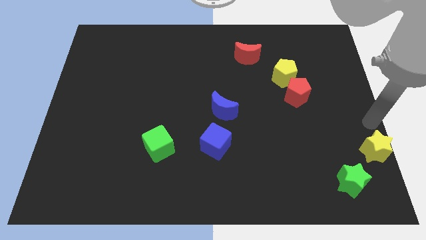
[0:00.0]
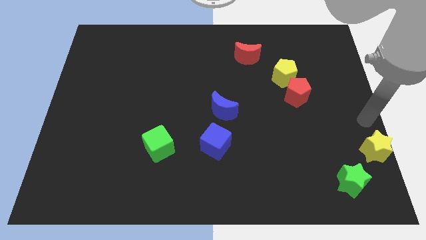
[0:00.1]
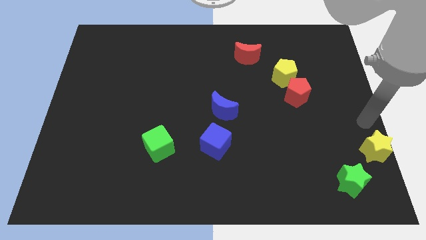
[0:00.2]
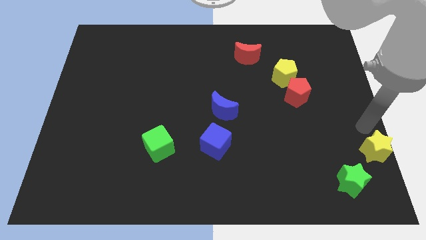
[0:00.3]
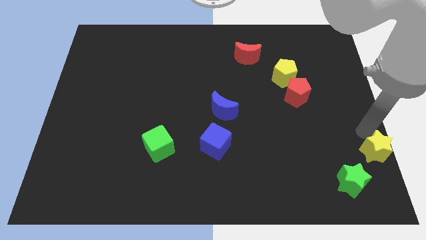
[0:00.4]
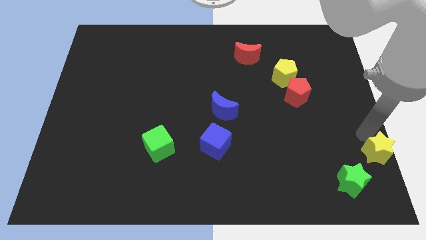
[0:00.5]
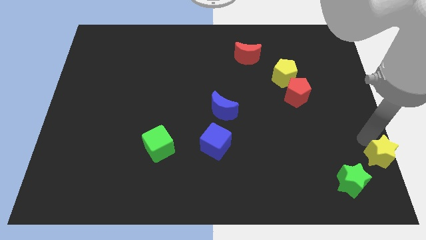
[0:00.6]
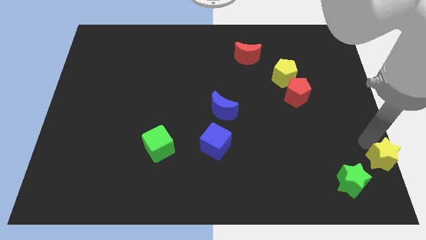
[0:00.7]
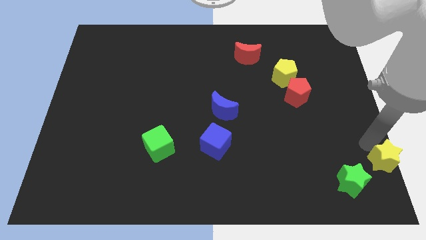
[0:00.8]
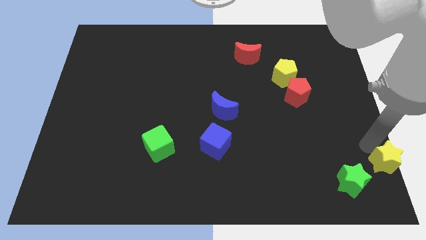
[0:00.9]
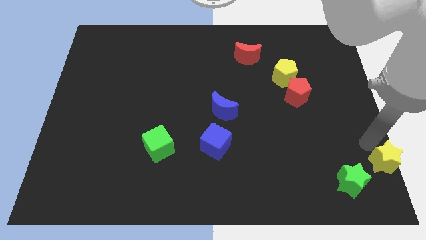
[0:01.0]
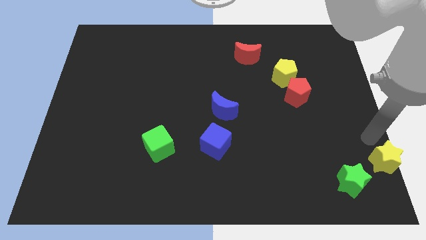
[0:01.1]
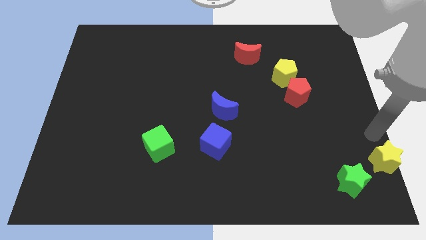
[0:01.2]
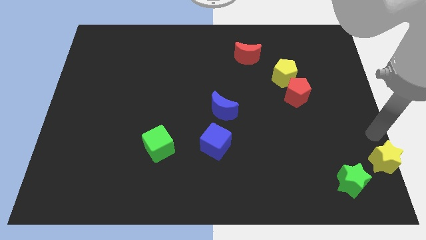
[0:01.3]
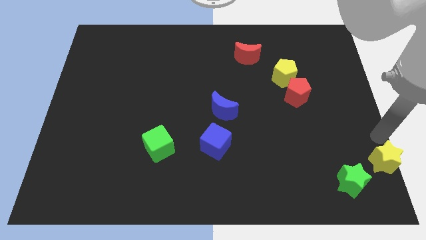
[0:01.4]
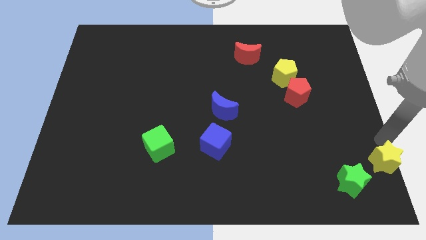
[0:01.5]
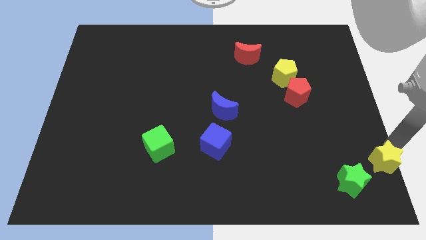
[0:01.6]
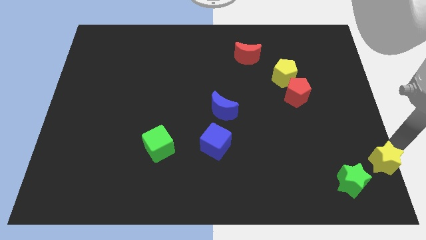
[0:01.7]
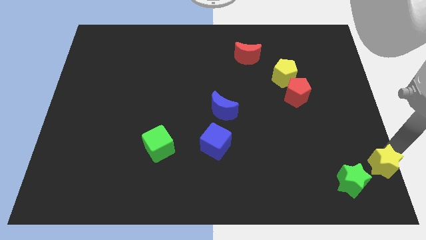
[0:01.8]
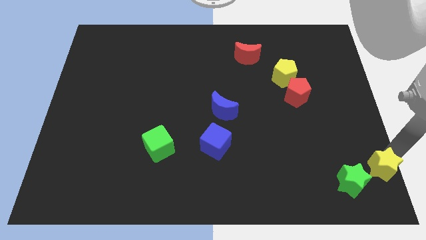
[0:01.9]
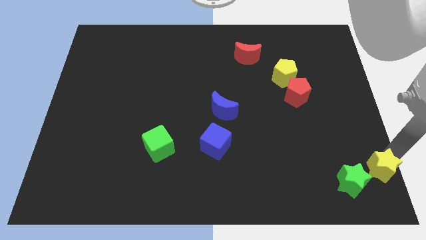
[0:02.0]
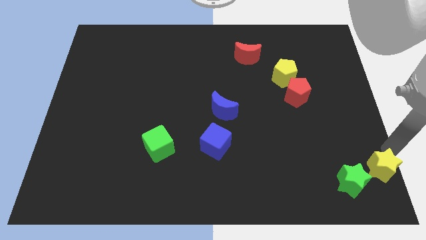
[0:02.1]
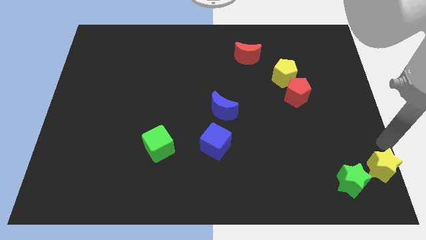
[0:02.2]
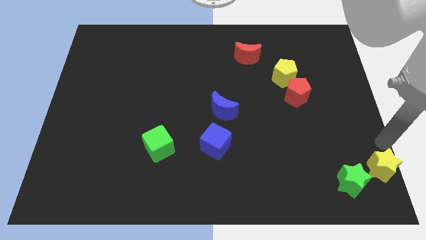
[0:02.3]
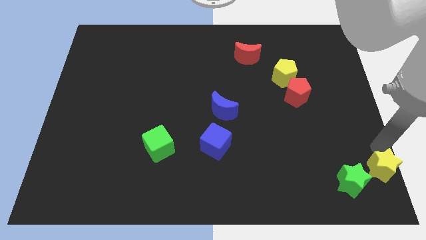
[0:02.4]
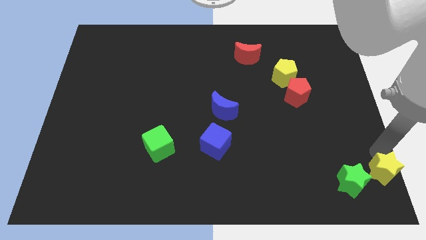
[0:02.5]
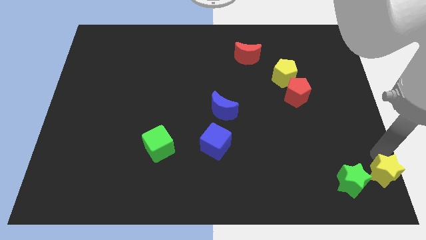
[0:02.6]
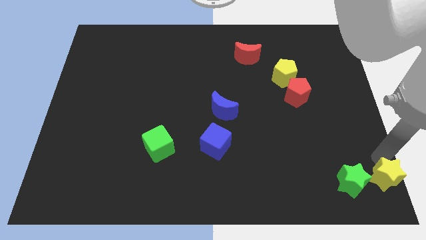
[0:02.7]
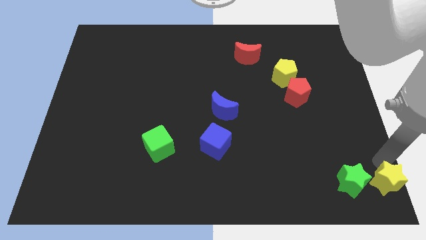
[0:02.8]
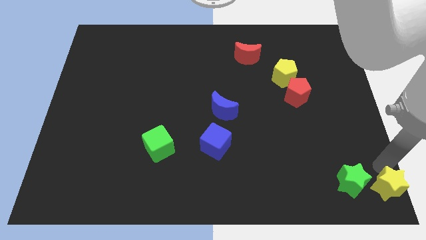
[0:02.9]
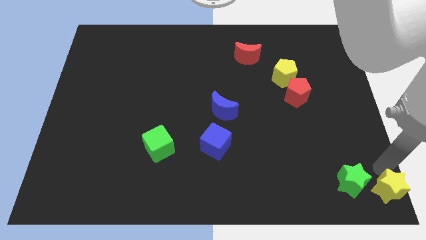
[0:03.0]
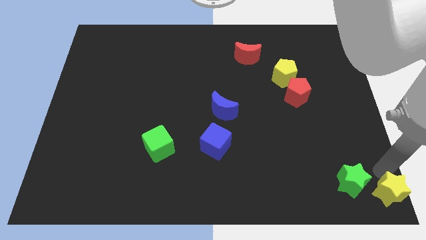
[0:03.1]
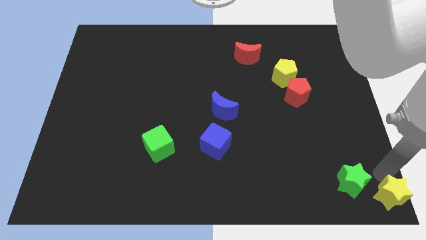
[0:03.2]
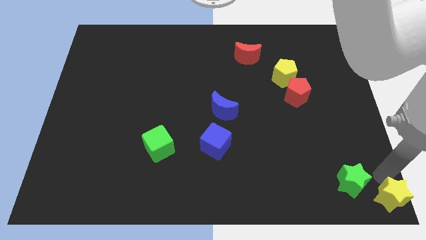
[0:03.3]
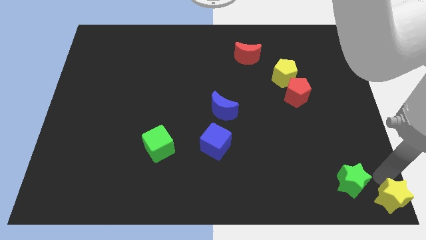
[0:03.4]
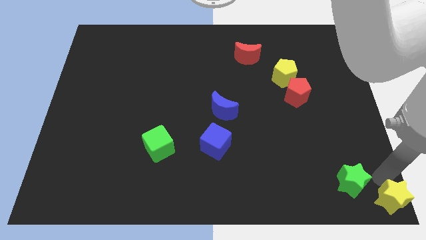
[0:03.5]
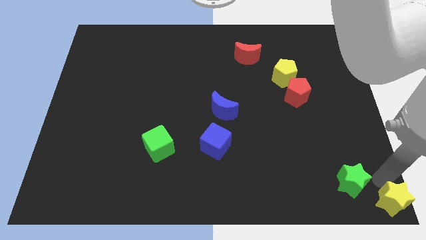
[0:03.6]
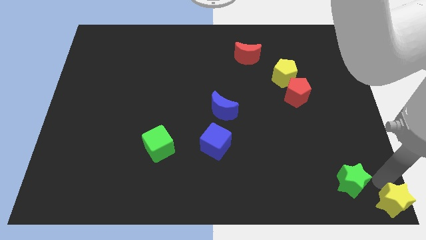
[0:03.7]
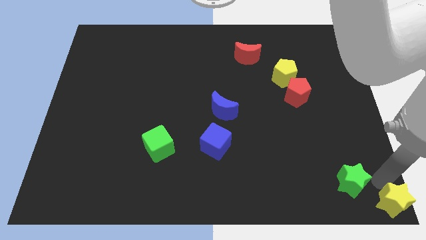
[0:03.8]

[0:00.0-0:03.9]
put the yellow star at the bottom right corner of the board

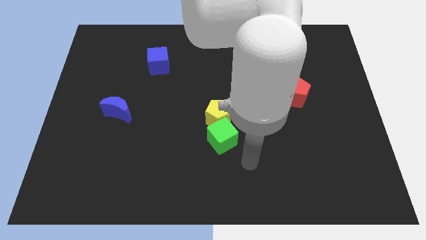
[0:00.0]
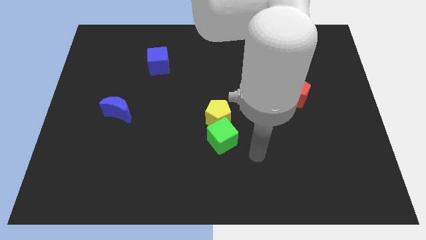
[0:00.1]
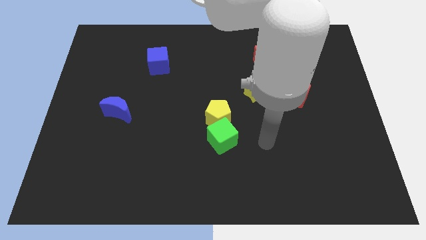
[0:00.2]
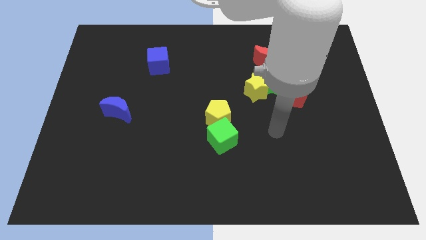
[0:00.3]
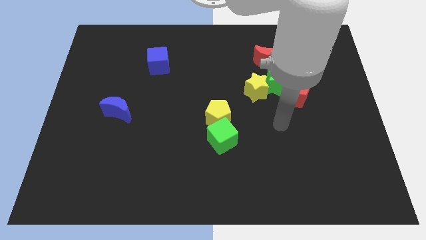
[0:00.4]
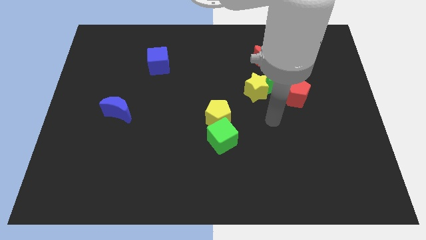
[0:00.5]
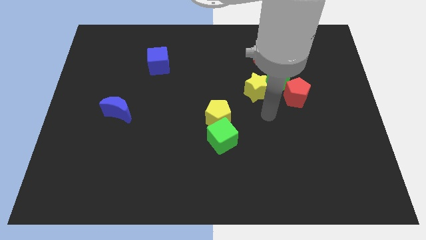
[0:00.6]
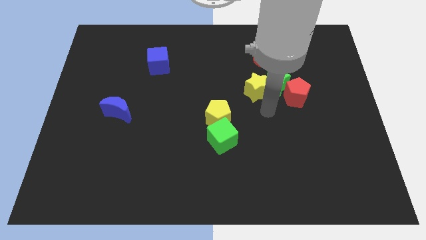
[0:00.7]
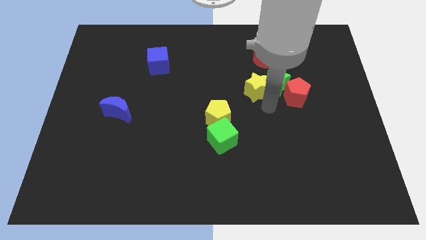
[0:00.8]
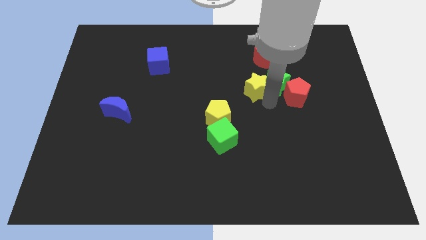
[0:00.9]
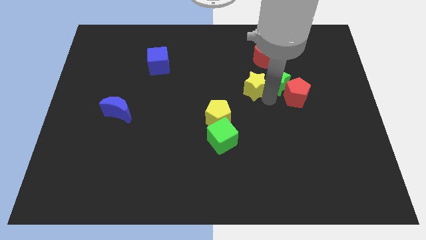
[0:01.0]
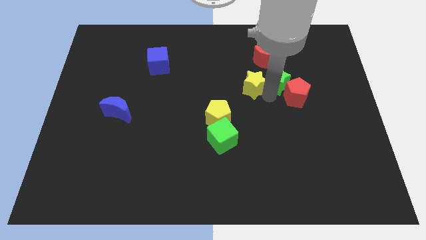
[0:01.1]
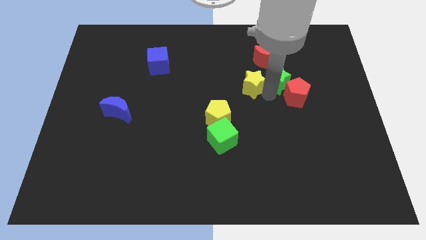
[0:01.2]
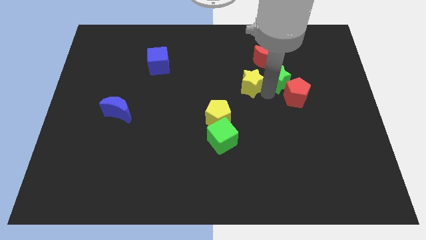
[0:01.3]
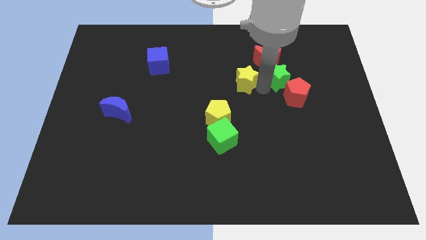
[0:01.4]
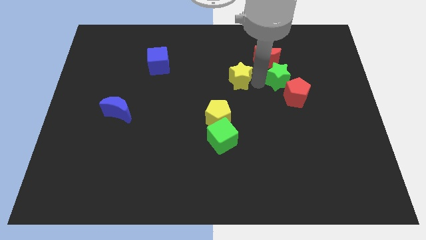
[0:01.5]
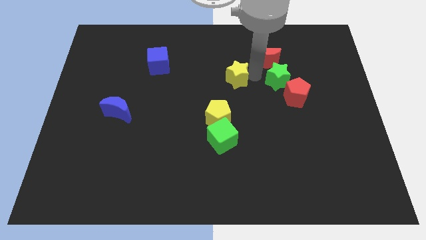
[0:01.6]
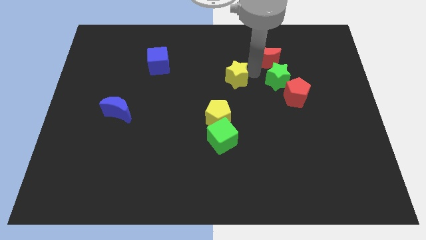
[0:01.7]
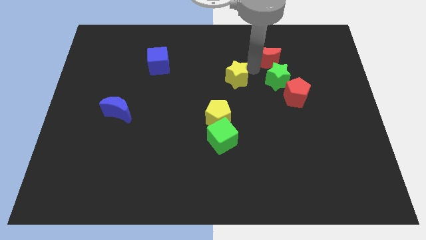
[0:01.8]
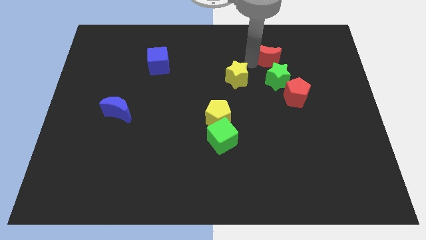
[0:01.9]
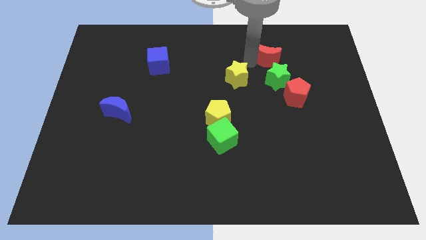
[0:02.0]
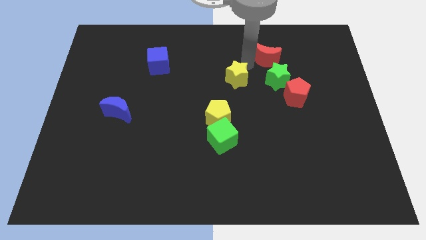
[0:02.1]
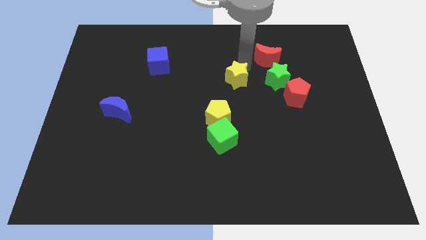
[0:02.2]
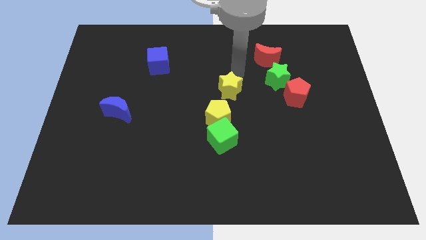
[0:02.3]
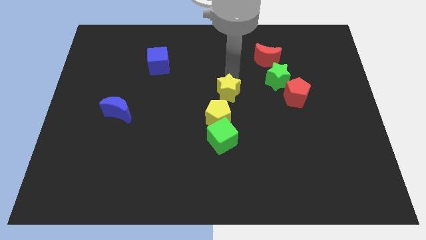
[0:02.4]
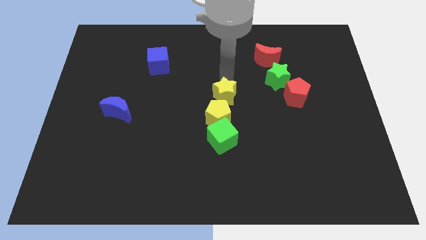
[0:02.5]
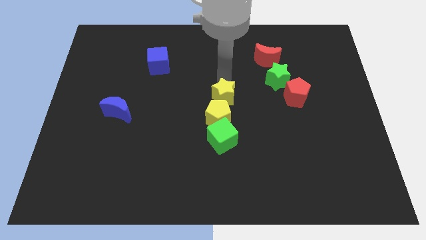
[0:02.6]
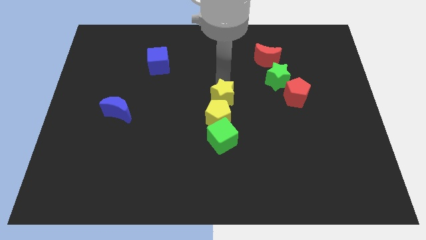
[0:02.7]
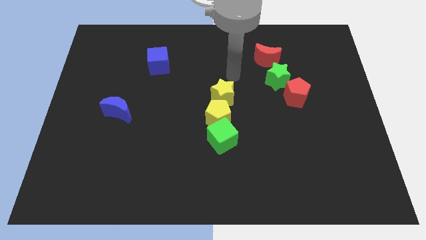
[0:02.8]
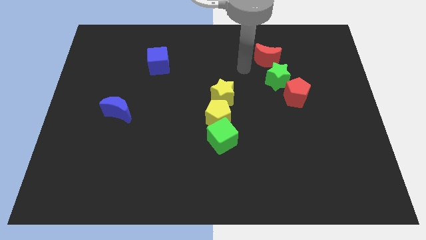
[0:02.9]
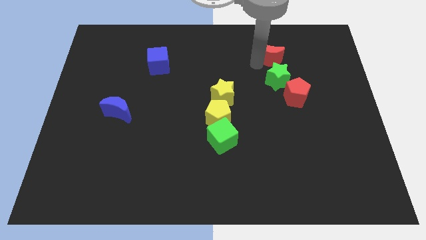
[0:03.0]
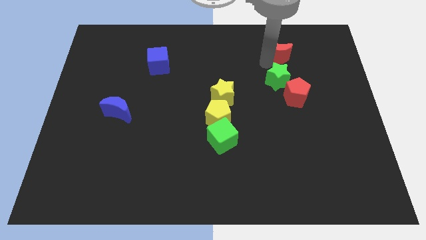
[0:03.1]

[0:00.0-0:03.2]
move the yellow star above the yellow pentagon

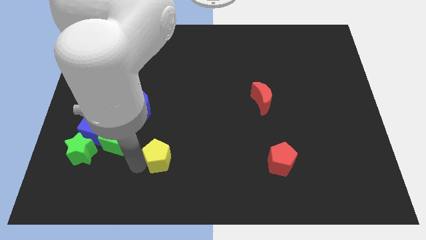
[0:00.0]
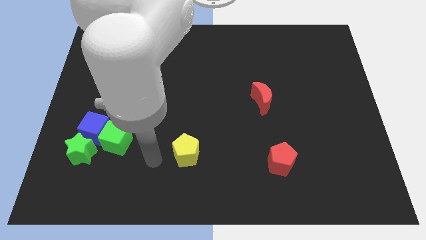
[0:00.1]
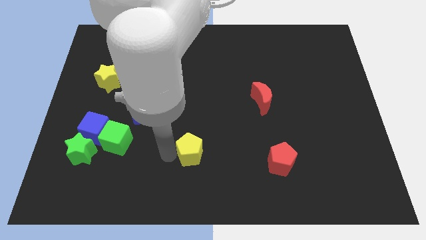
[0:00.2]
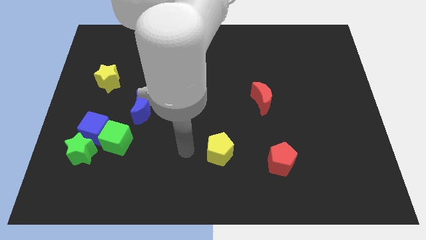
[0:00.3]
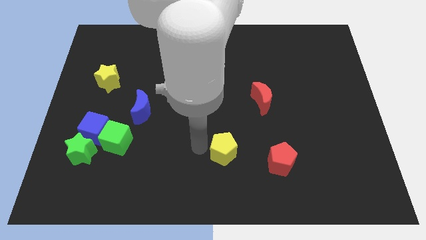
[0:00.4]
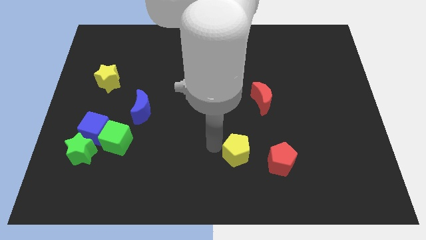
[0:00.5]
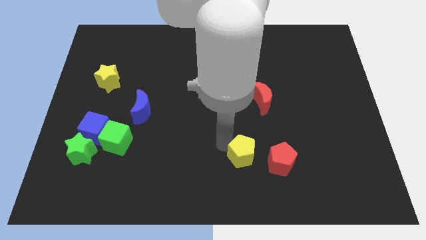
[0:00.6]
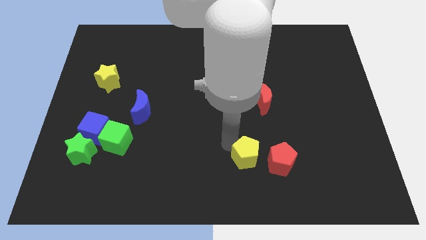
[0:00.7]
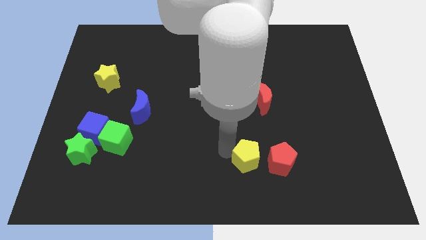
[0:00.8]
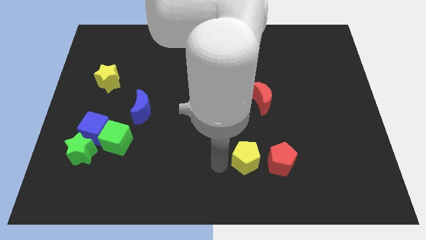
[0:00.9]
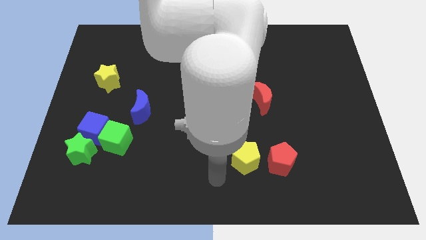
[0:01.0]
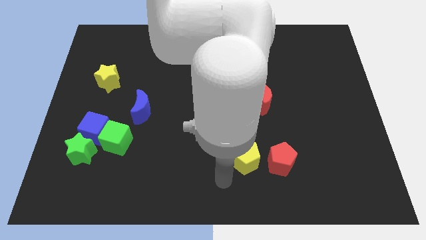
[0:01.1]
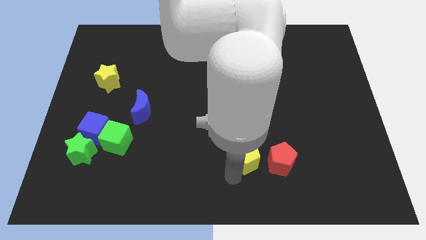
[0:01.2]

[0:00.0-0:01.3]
place the yellow pentagon left to the red pentagon

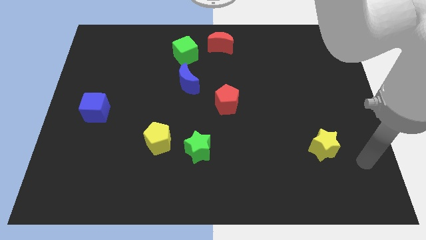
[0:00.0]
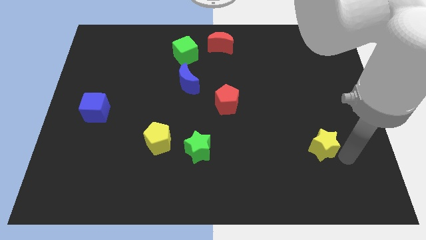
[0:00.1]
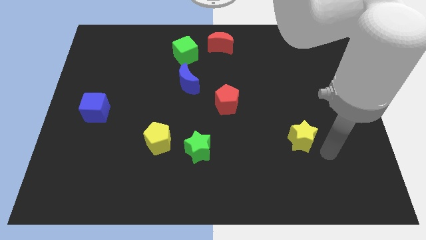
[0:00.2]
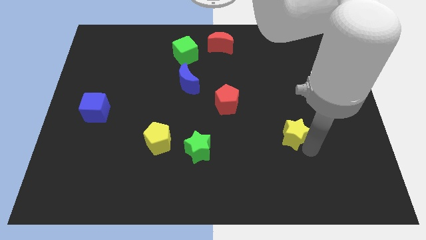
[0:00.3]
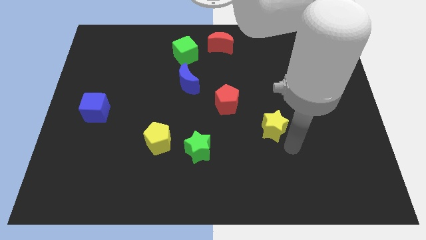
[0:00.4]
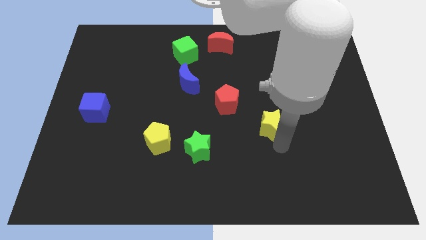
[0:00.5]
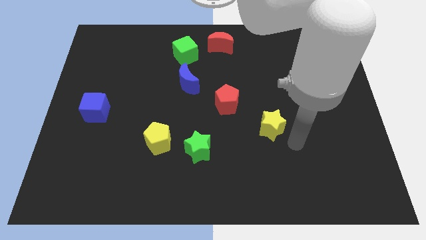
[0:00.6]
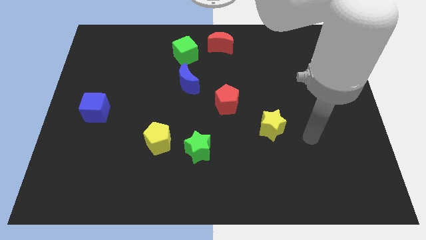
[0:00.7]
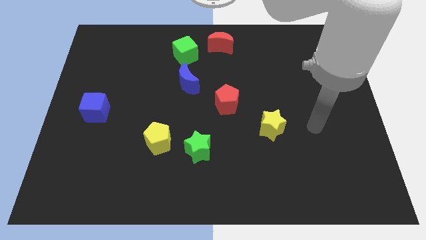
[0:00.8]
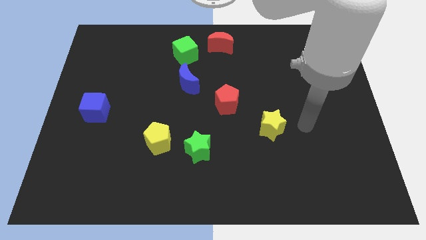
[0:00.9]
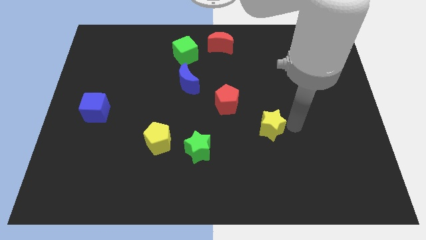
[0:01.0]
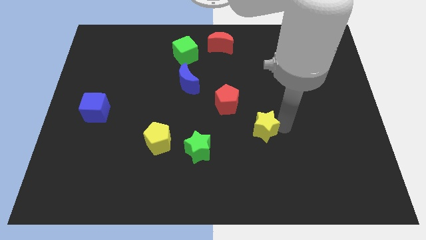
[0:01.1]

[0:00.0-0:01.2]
push yellow star diagonally bottom right to the red pentagon
